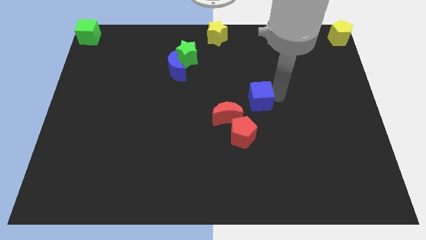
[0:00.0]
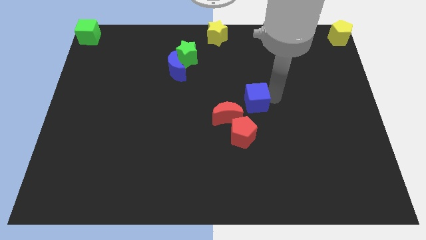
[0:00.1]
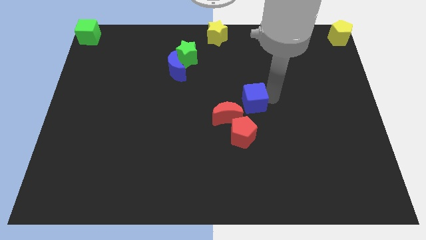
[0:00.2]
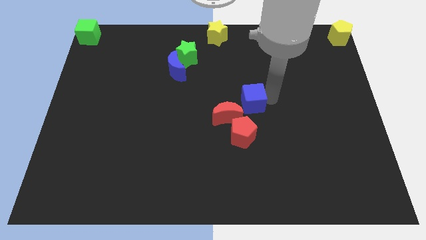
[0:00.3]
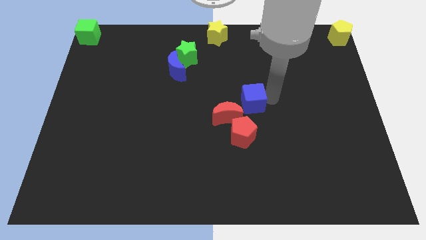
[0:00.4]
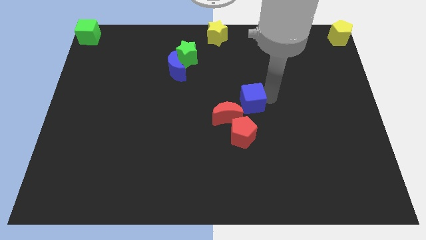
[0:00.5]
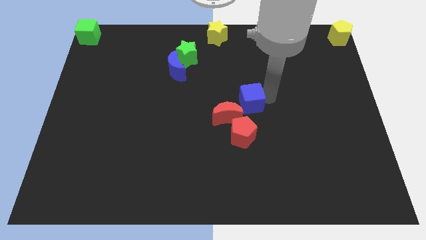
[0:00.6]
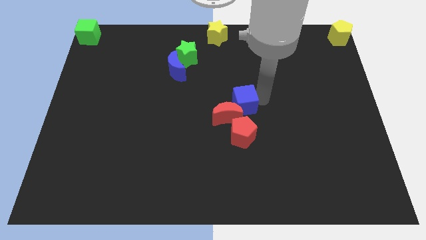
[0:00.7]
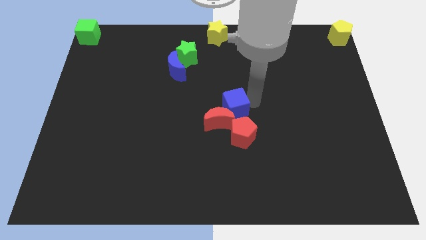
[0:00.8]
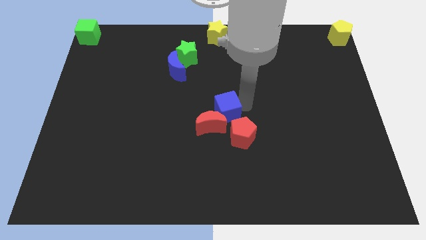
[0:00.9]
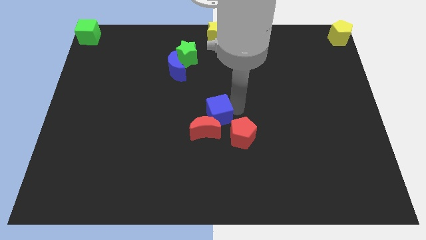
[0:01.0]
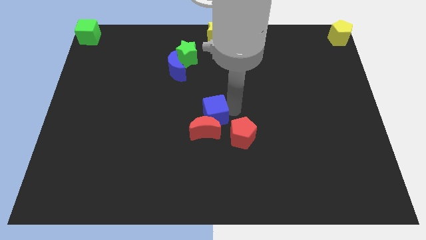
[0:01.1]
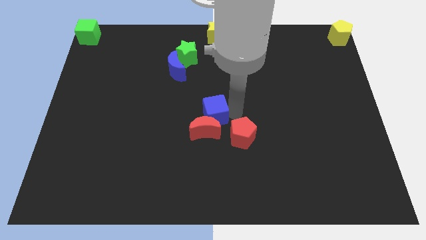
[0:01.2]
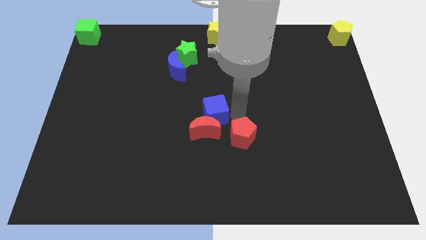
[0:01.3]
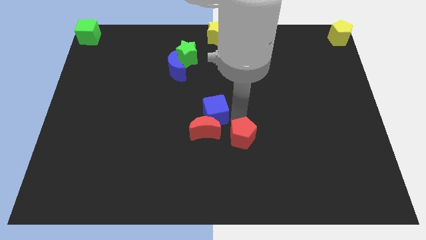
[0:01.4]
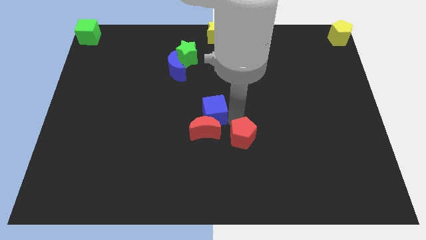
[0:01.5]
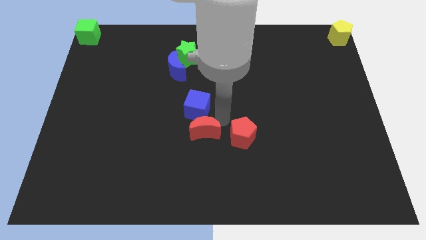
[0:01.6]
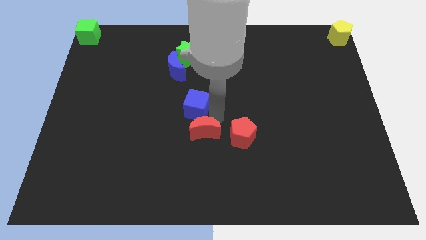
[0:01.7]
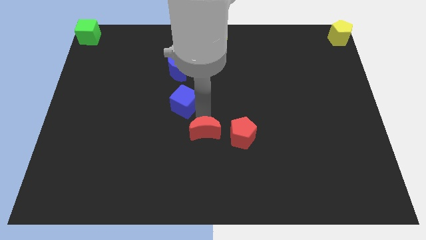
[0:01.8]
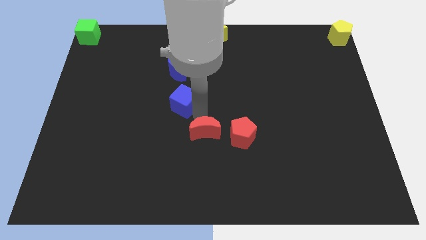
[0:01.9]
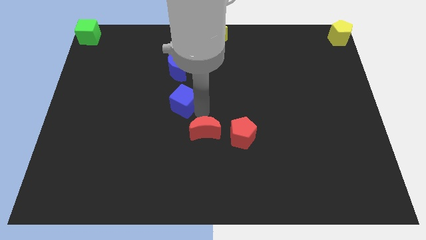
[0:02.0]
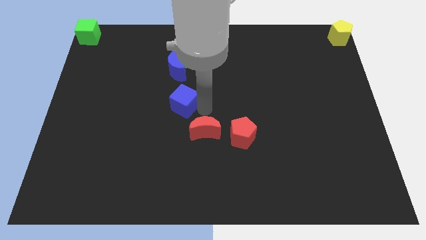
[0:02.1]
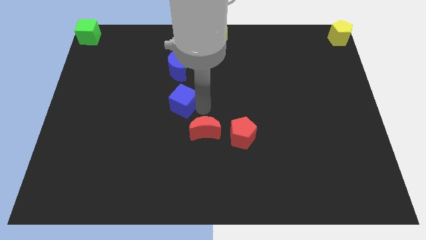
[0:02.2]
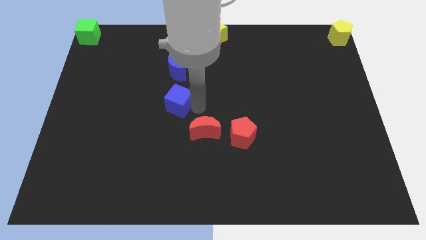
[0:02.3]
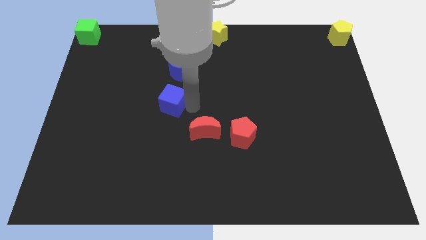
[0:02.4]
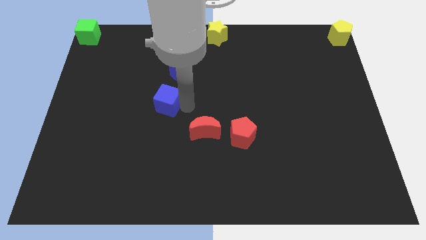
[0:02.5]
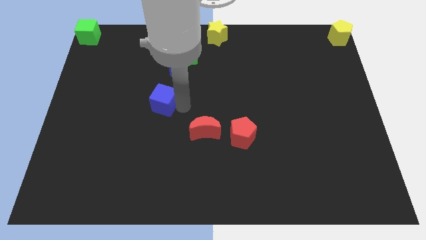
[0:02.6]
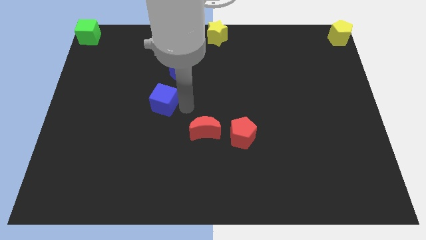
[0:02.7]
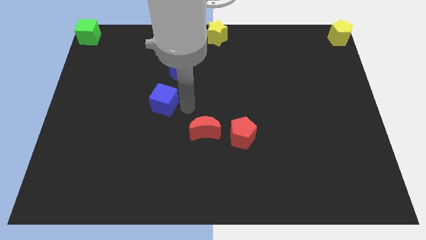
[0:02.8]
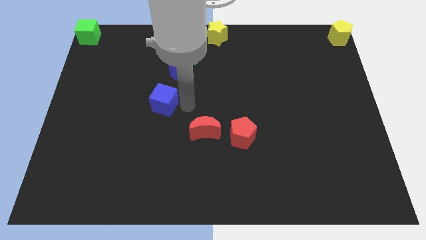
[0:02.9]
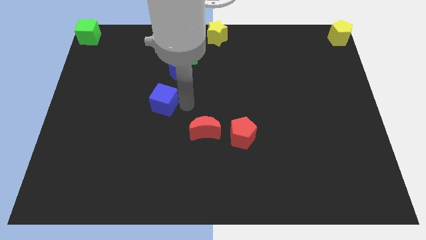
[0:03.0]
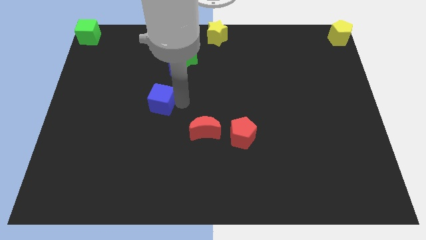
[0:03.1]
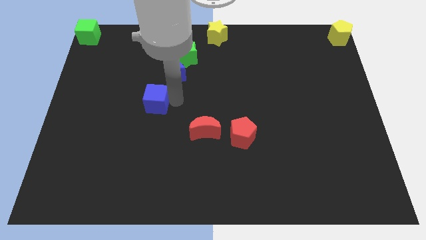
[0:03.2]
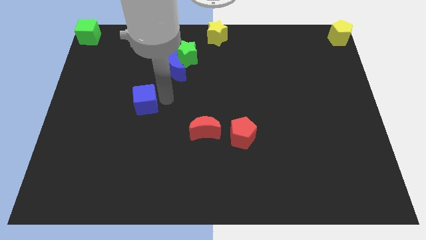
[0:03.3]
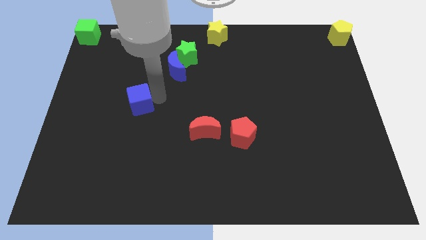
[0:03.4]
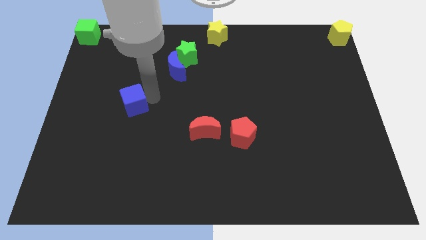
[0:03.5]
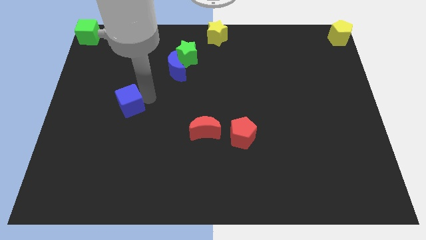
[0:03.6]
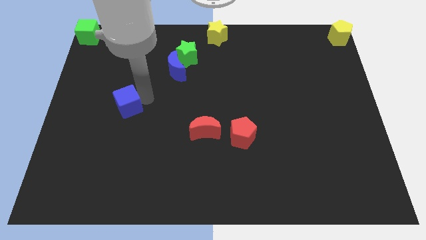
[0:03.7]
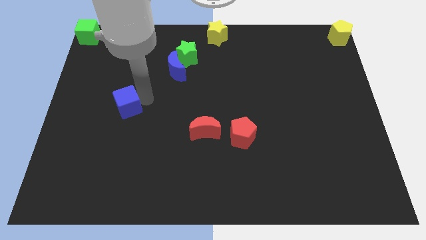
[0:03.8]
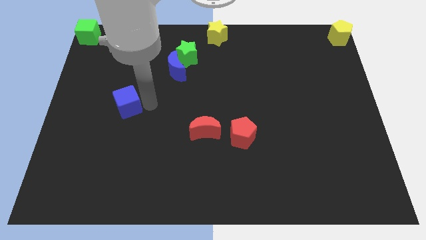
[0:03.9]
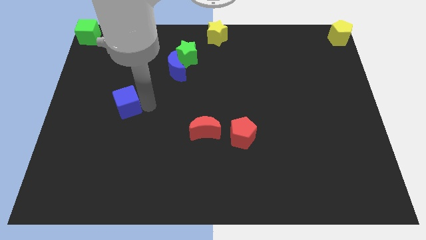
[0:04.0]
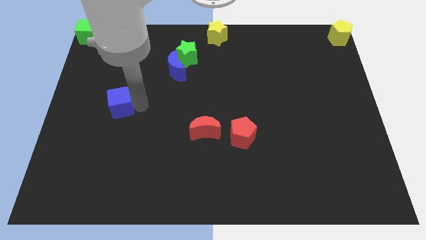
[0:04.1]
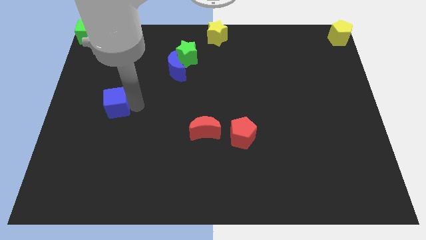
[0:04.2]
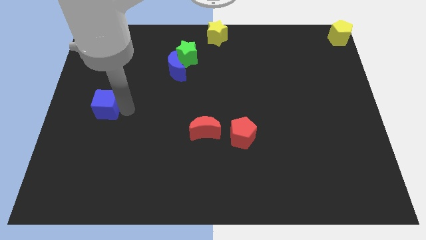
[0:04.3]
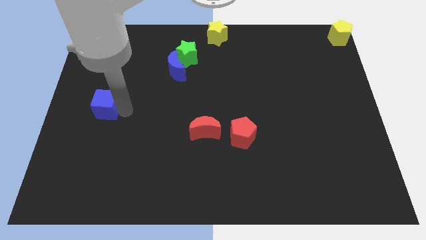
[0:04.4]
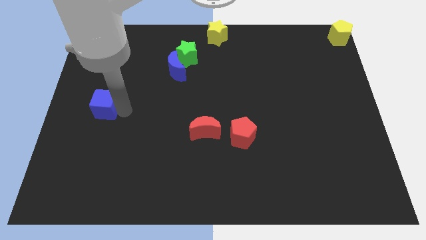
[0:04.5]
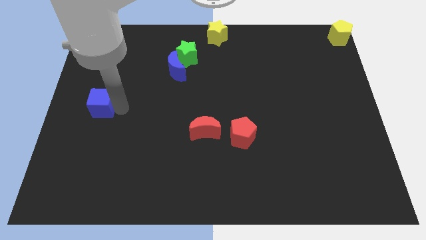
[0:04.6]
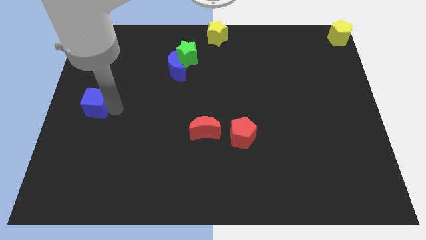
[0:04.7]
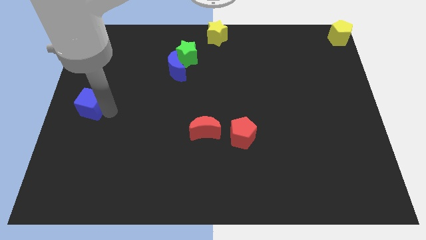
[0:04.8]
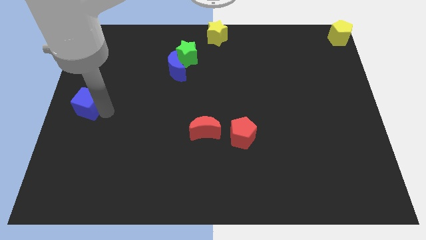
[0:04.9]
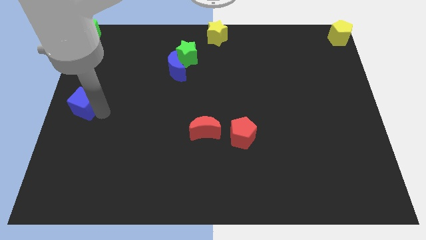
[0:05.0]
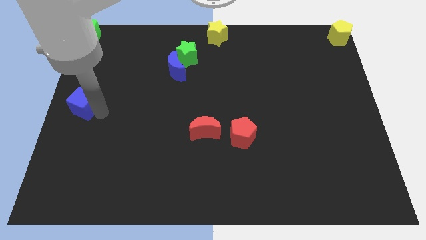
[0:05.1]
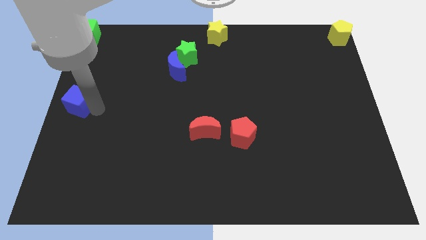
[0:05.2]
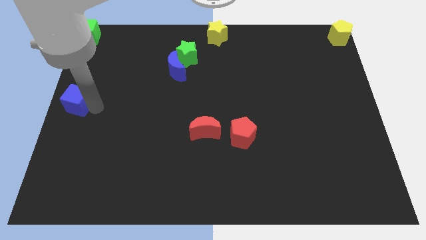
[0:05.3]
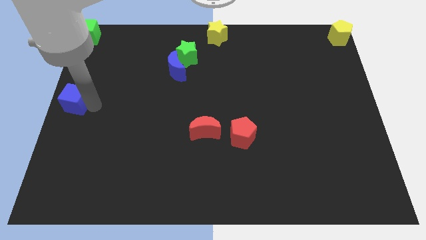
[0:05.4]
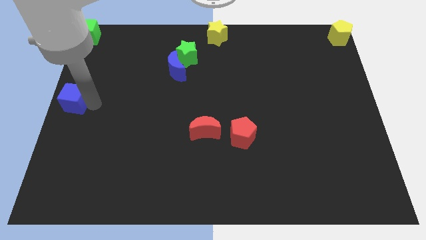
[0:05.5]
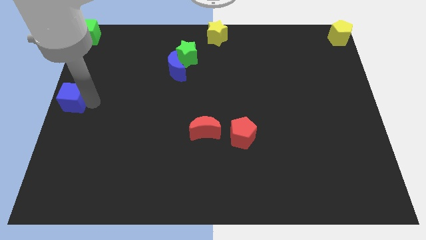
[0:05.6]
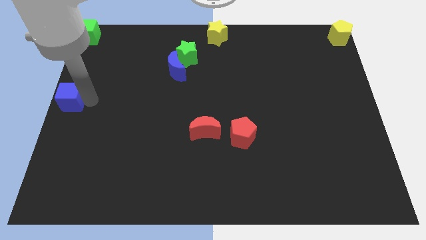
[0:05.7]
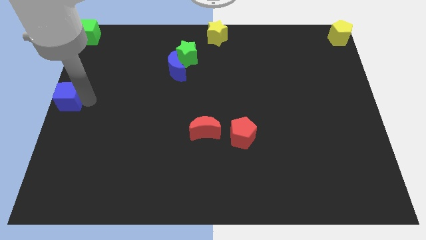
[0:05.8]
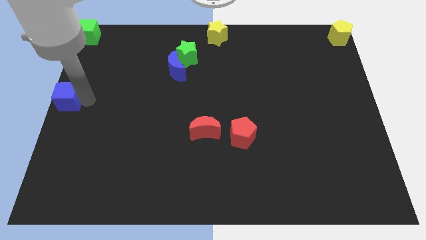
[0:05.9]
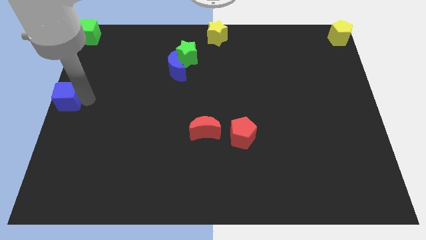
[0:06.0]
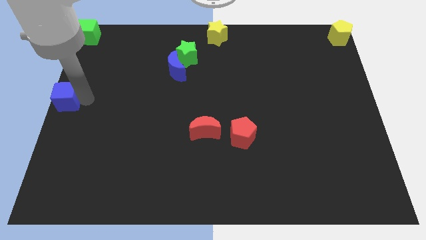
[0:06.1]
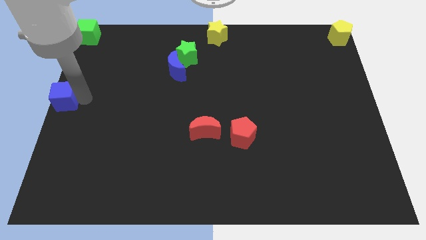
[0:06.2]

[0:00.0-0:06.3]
push blue cube towards middle left side of the board

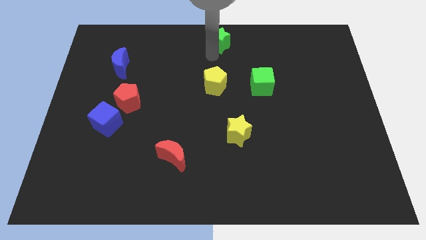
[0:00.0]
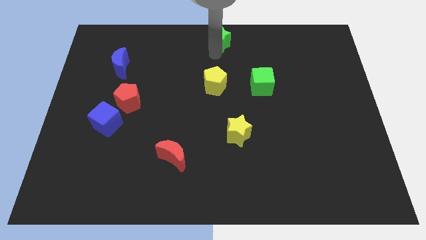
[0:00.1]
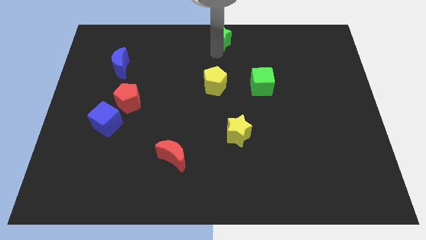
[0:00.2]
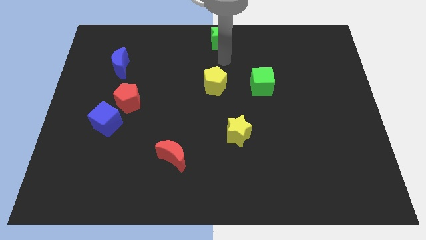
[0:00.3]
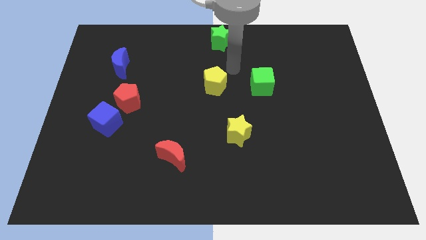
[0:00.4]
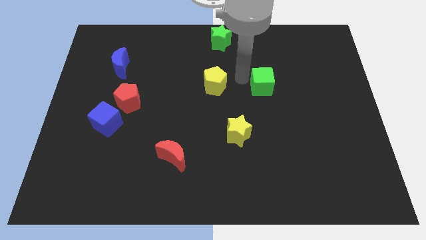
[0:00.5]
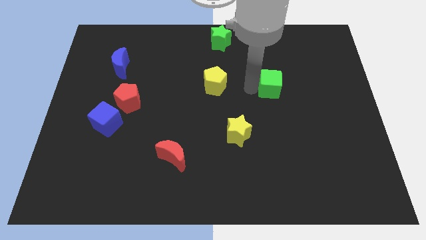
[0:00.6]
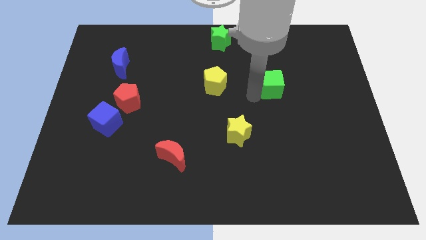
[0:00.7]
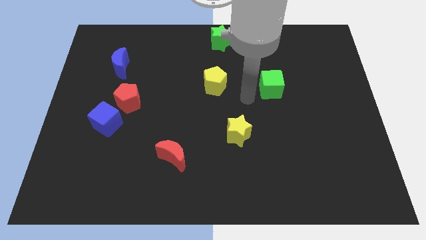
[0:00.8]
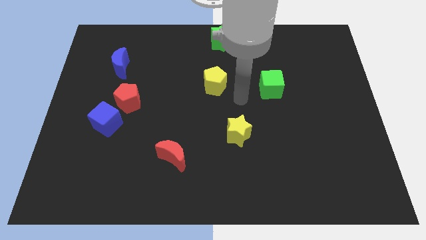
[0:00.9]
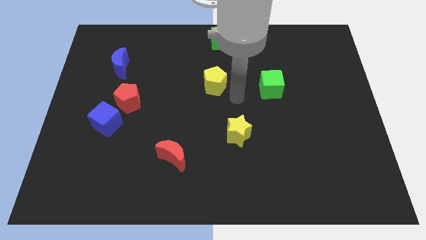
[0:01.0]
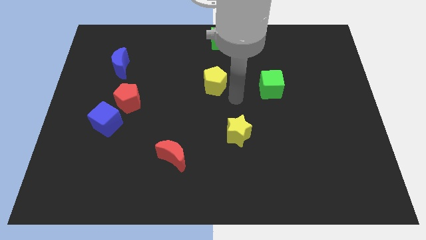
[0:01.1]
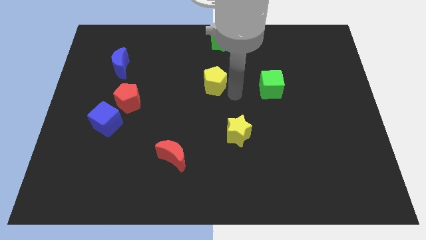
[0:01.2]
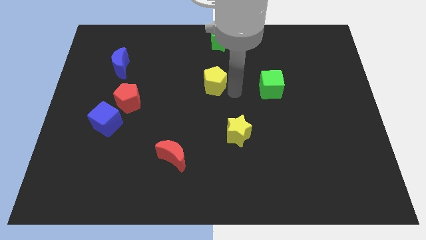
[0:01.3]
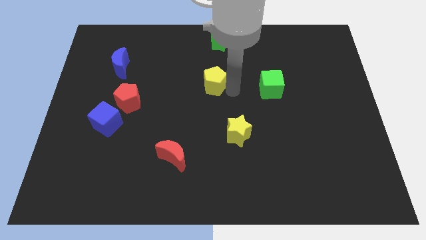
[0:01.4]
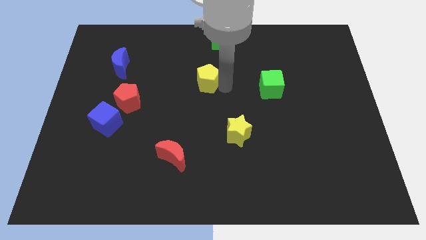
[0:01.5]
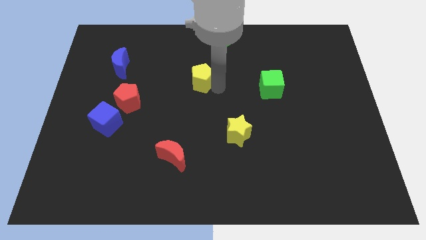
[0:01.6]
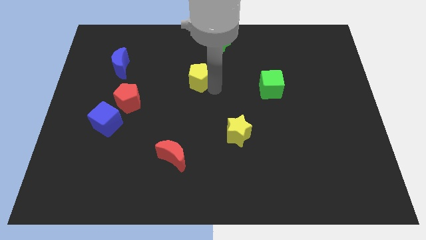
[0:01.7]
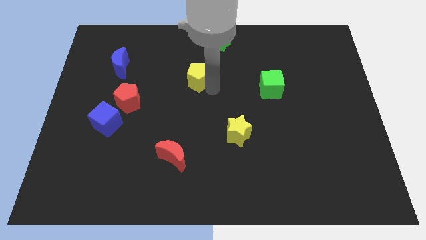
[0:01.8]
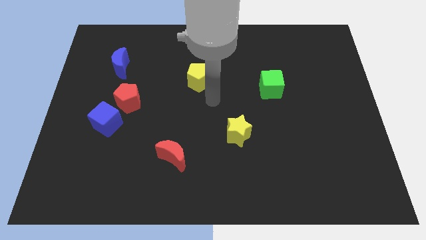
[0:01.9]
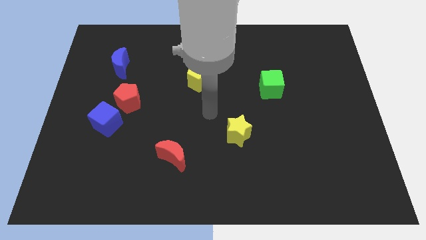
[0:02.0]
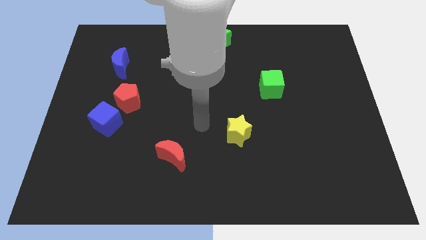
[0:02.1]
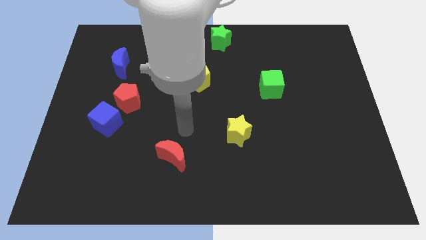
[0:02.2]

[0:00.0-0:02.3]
move the green star to the top and slightly push the green cube and yellow pentagon

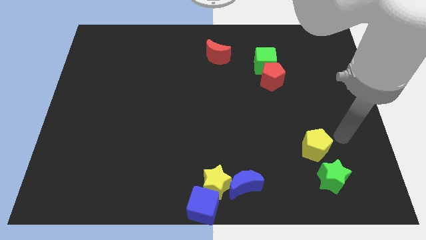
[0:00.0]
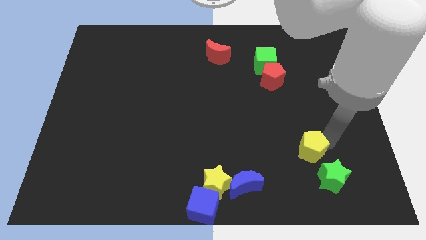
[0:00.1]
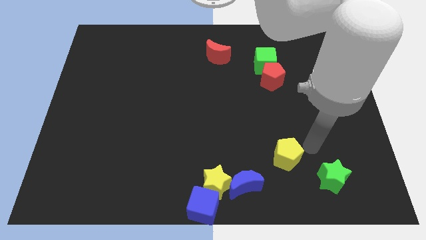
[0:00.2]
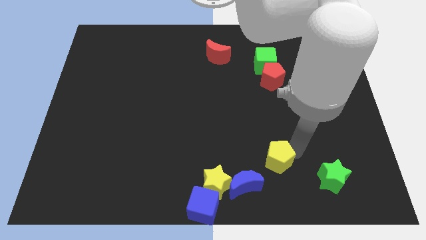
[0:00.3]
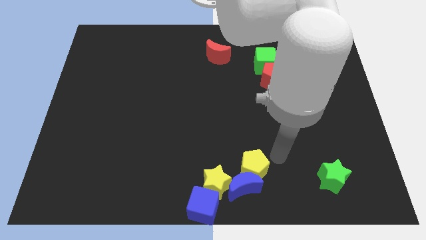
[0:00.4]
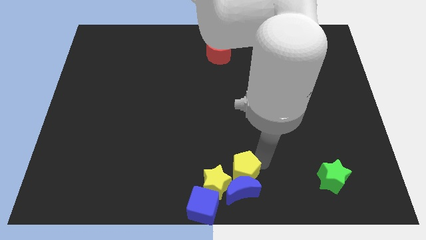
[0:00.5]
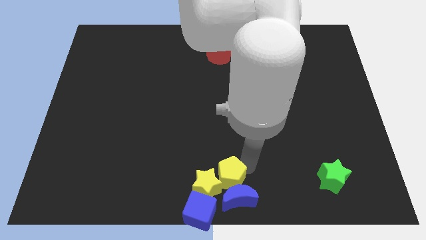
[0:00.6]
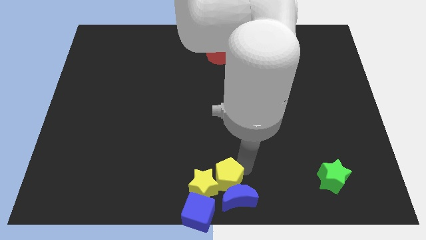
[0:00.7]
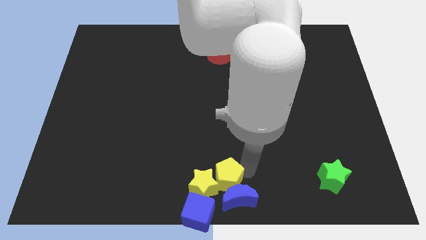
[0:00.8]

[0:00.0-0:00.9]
push the yellow pentagon into the group of blocks
